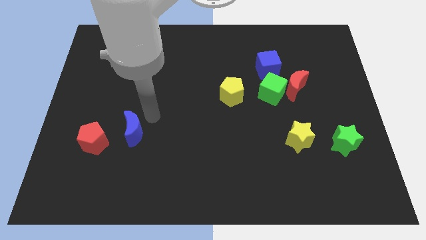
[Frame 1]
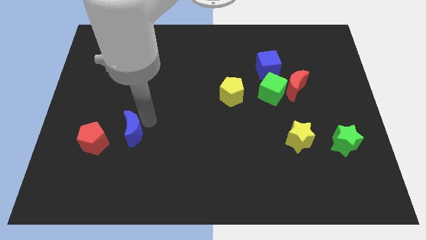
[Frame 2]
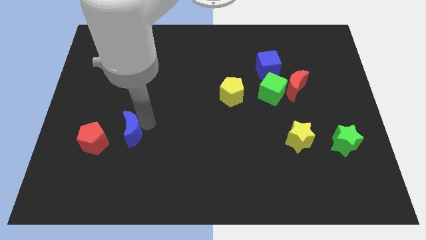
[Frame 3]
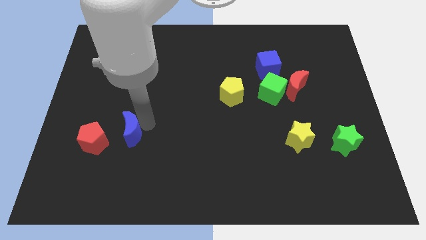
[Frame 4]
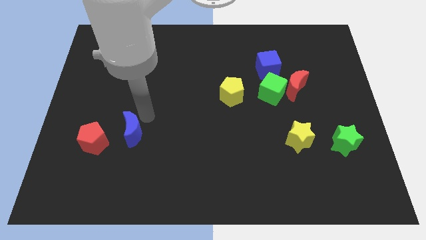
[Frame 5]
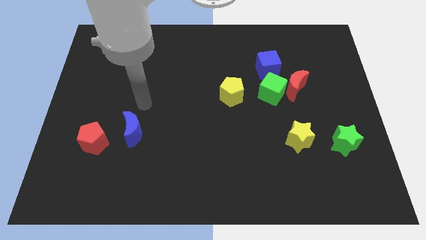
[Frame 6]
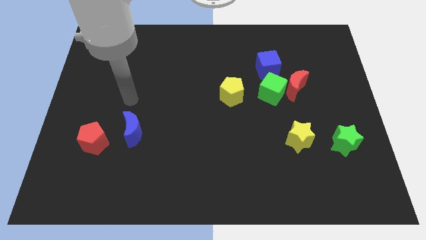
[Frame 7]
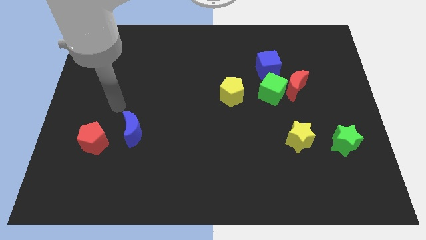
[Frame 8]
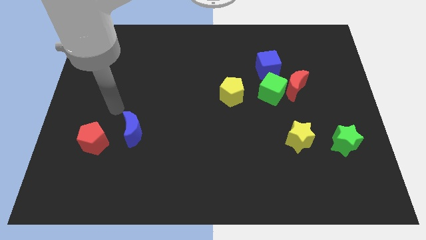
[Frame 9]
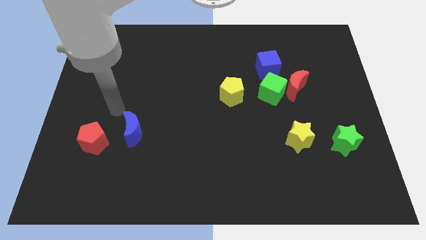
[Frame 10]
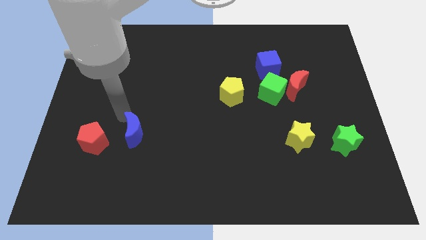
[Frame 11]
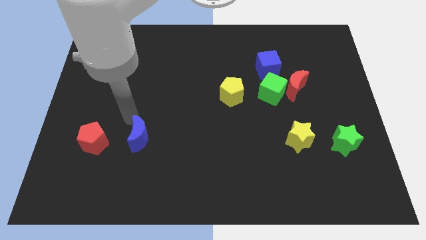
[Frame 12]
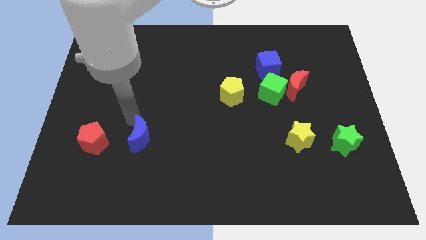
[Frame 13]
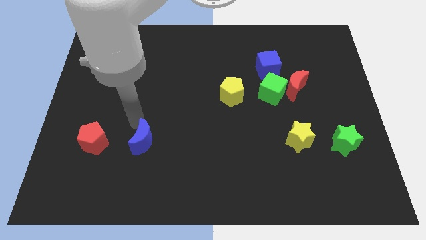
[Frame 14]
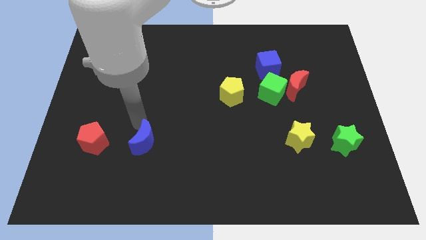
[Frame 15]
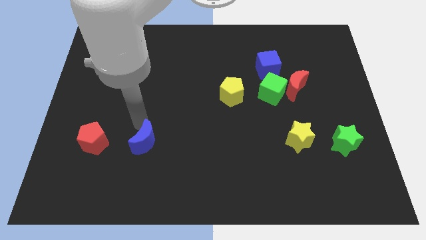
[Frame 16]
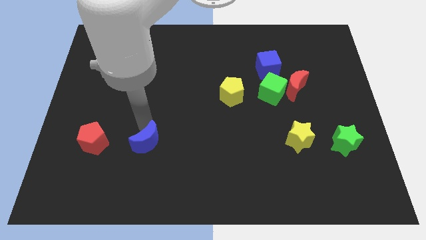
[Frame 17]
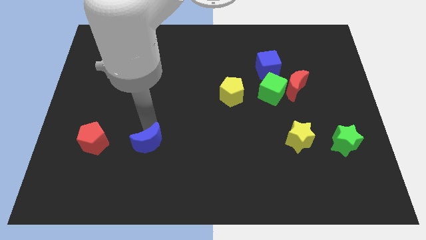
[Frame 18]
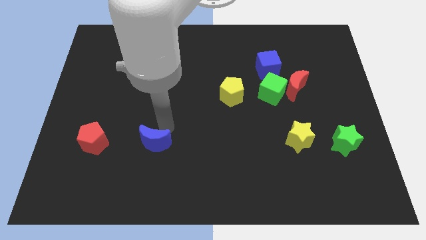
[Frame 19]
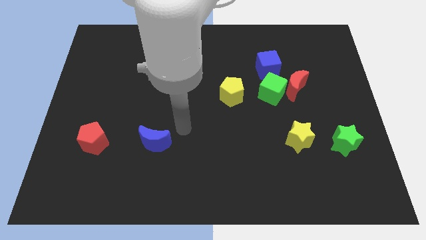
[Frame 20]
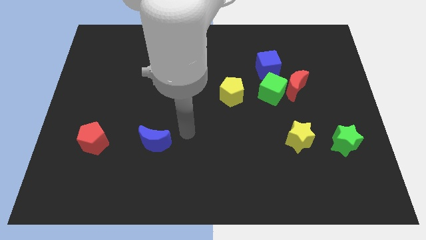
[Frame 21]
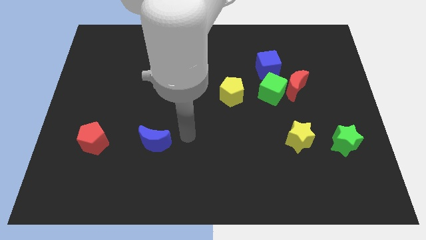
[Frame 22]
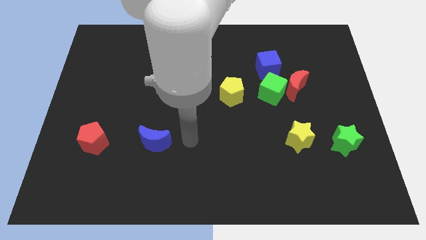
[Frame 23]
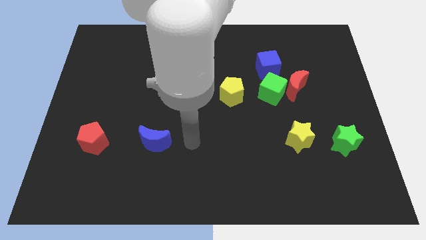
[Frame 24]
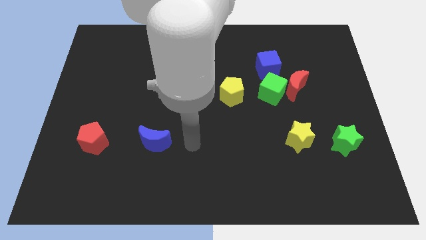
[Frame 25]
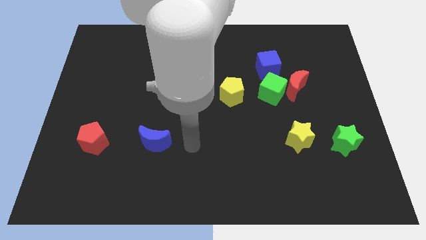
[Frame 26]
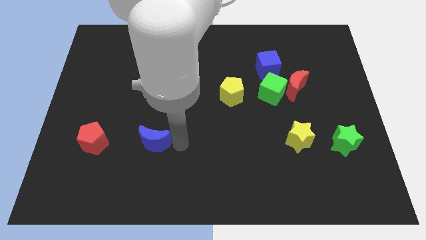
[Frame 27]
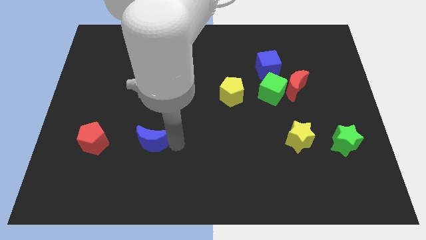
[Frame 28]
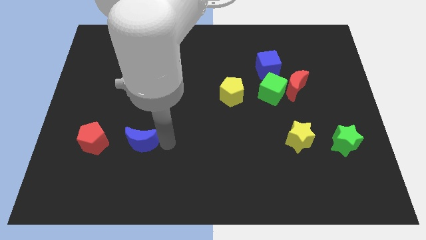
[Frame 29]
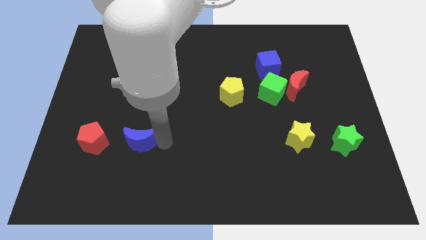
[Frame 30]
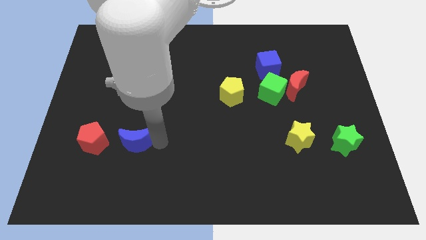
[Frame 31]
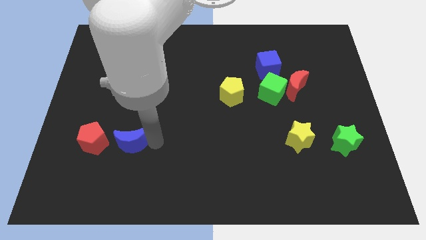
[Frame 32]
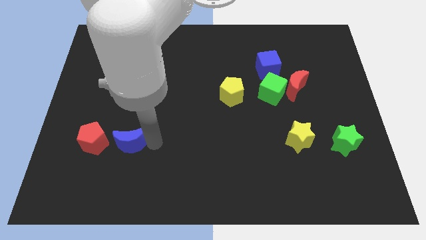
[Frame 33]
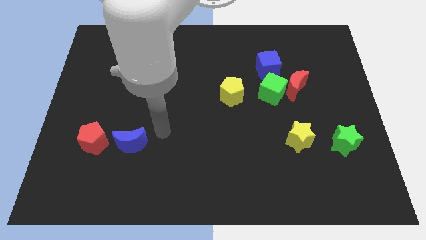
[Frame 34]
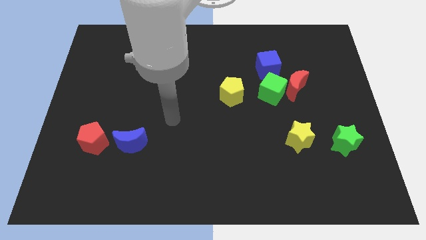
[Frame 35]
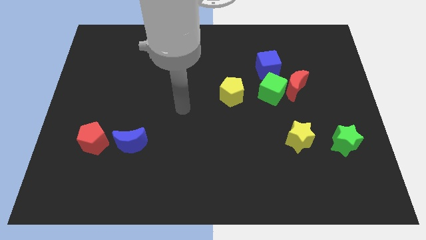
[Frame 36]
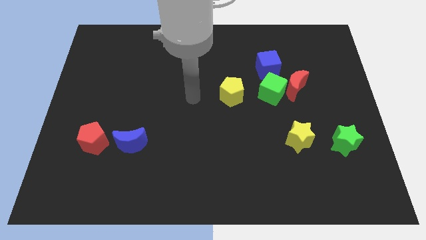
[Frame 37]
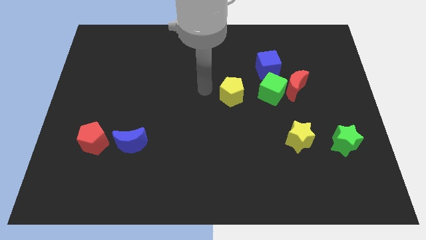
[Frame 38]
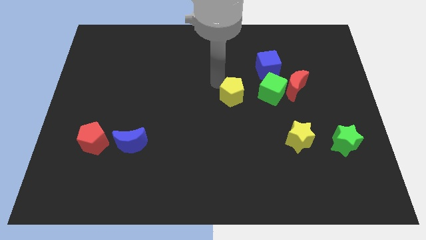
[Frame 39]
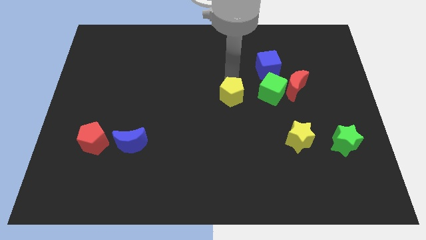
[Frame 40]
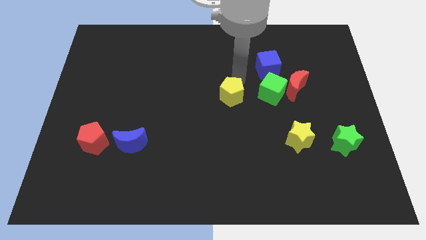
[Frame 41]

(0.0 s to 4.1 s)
move the blue moon close to the red pentagon

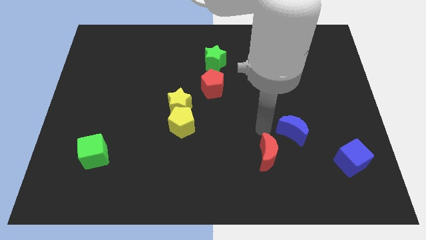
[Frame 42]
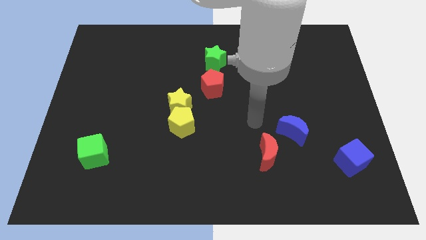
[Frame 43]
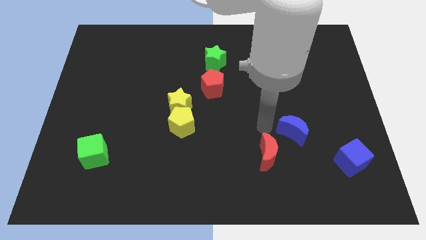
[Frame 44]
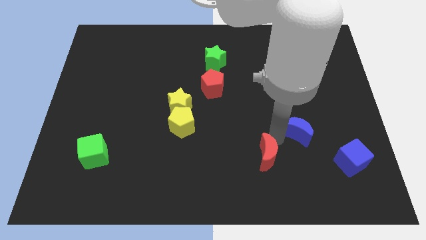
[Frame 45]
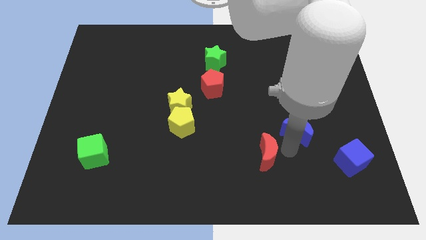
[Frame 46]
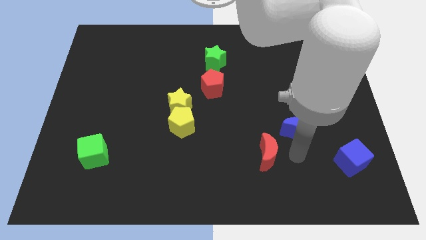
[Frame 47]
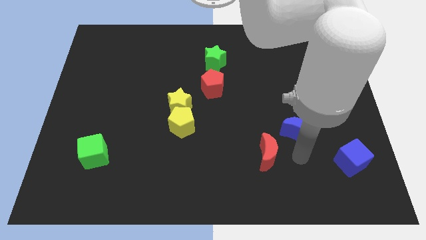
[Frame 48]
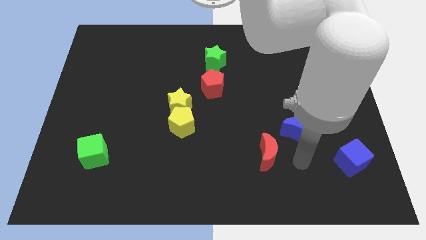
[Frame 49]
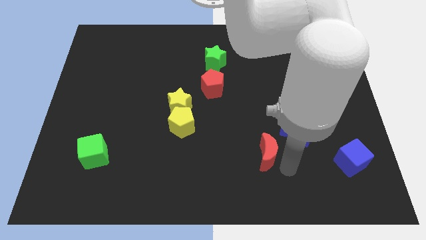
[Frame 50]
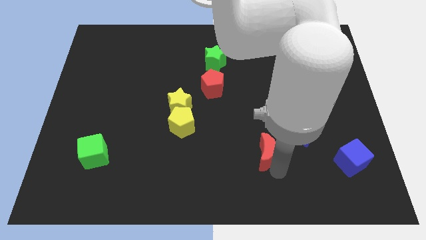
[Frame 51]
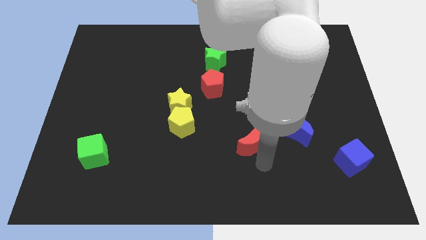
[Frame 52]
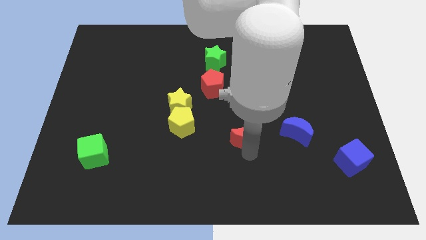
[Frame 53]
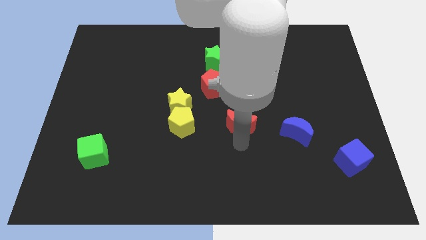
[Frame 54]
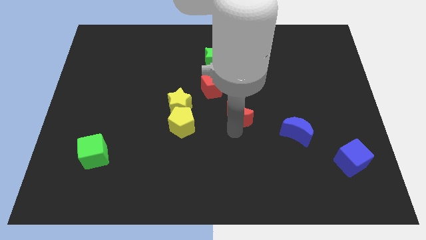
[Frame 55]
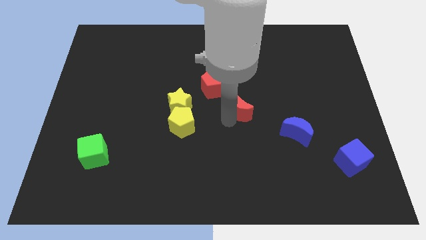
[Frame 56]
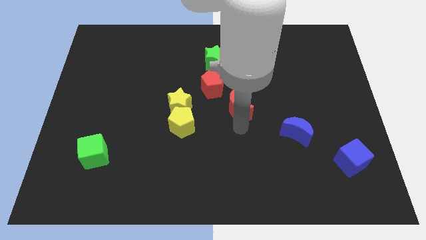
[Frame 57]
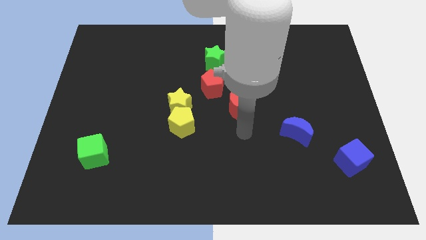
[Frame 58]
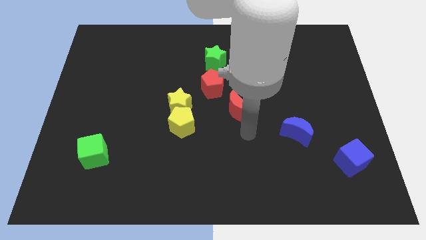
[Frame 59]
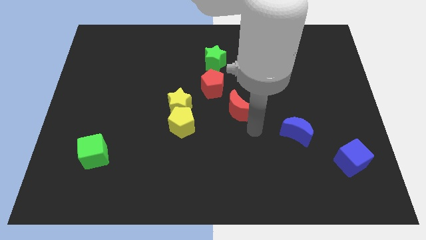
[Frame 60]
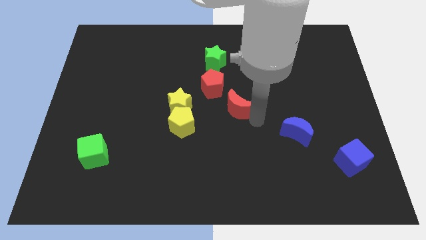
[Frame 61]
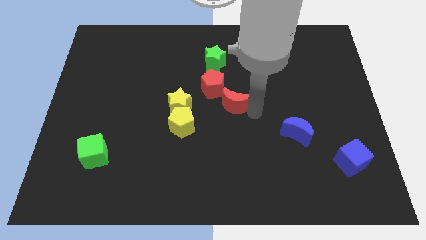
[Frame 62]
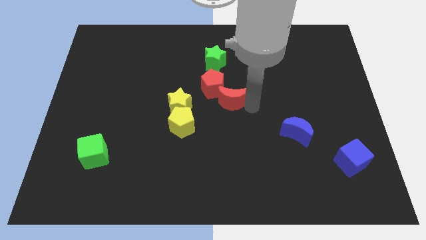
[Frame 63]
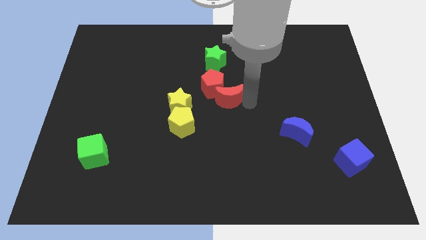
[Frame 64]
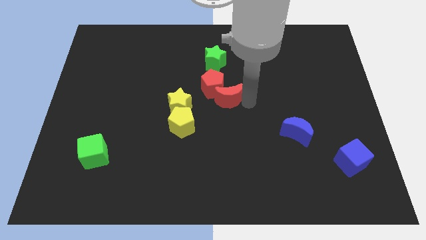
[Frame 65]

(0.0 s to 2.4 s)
place the red moon right to the yellow star

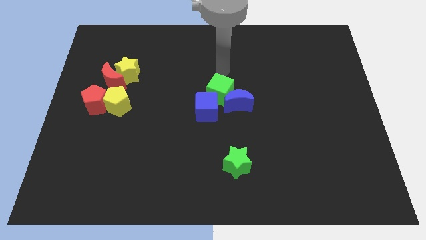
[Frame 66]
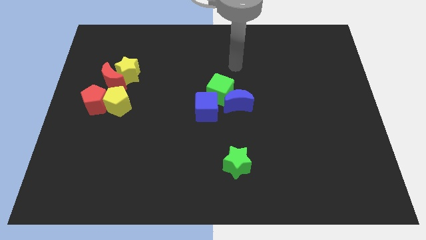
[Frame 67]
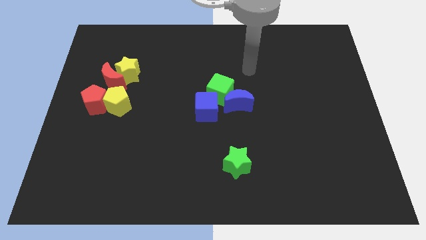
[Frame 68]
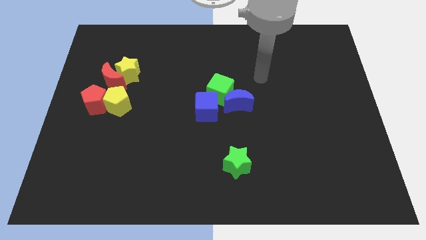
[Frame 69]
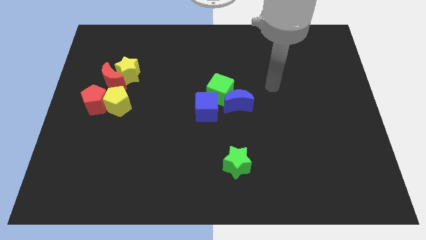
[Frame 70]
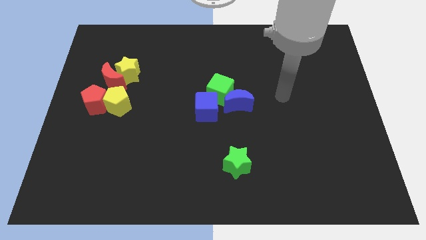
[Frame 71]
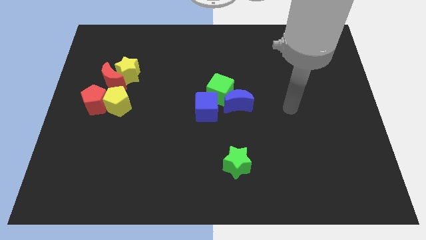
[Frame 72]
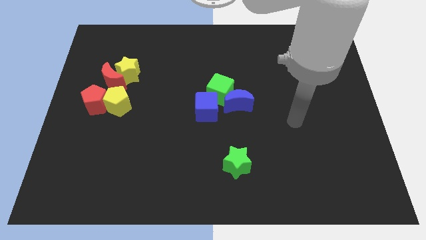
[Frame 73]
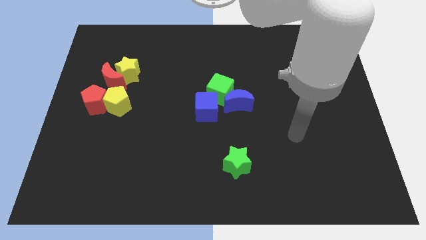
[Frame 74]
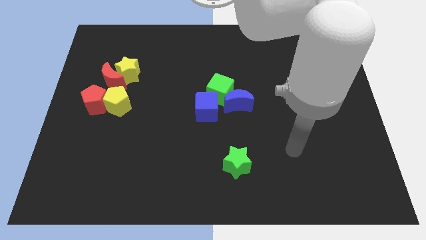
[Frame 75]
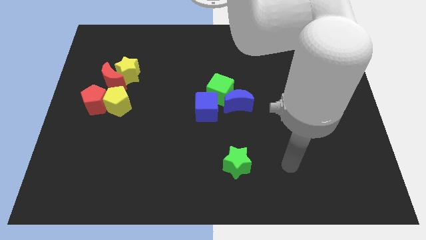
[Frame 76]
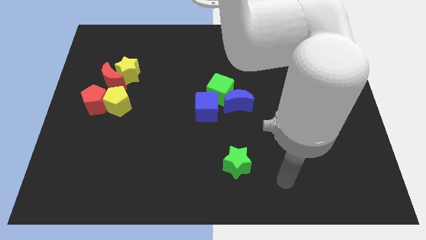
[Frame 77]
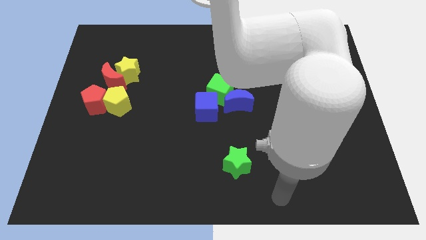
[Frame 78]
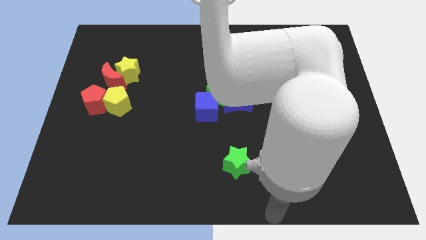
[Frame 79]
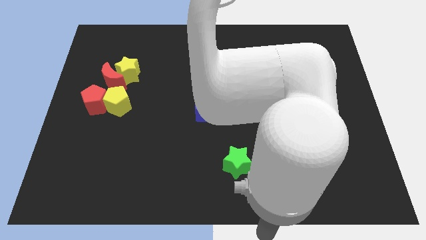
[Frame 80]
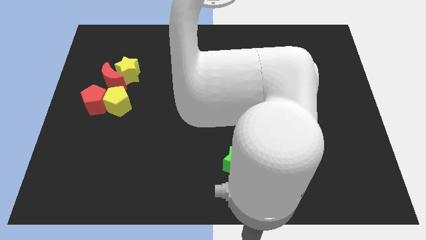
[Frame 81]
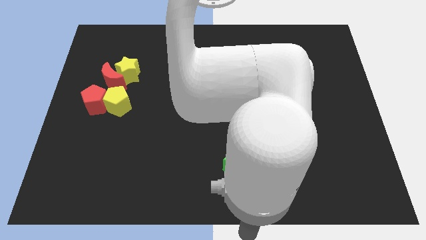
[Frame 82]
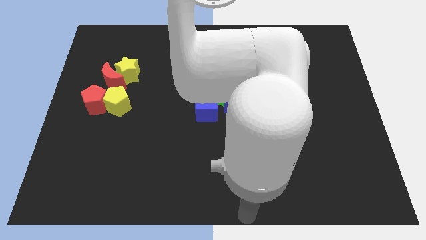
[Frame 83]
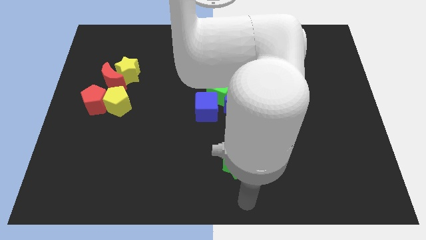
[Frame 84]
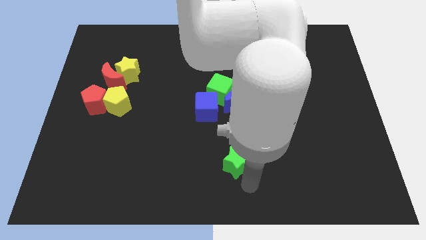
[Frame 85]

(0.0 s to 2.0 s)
move your arm towards the bottom center of the board

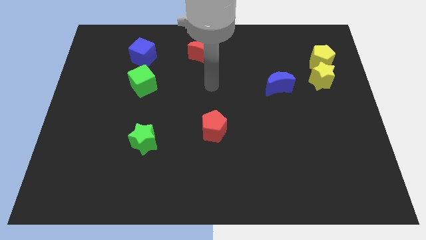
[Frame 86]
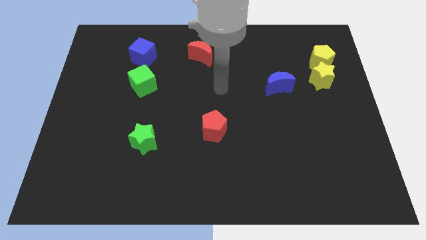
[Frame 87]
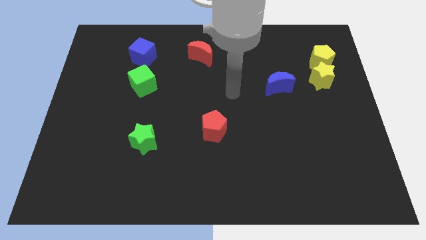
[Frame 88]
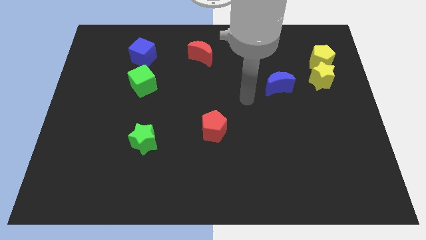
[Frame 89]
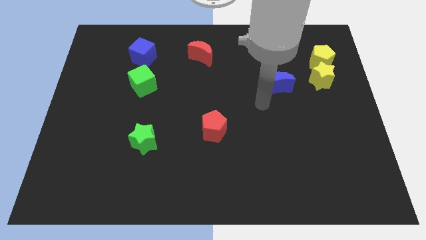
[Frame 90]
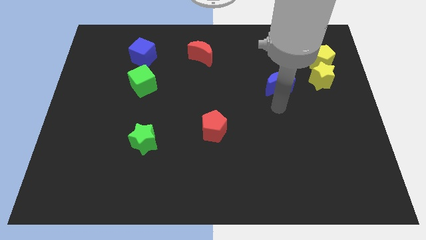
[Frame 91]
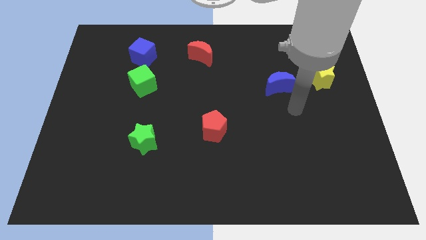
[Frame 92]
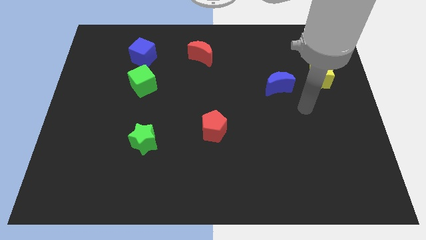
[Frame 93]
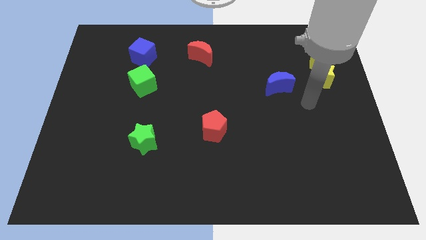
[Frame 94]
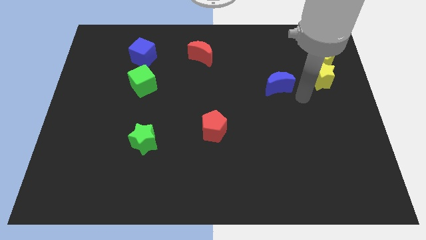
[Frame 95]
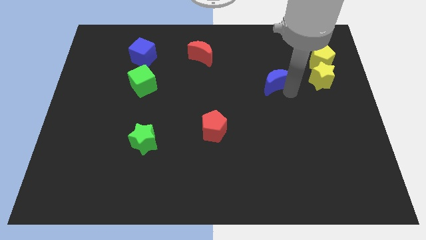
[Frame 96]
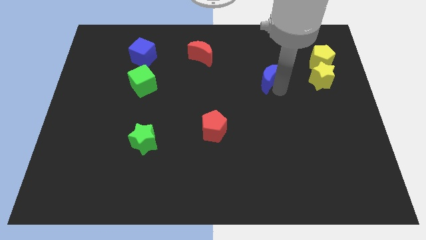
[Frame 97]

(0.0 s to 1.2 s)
move your arm towards the right side of the blue moon
